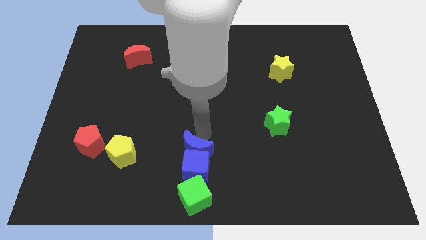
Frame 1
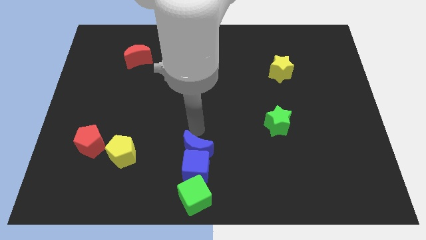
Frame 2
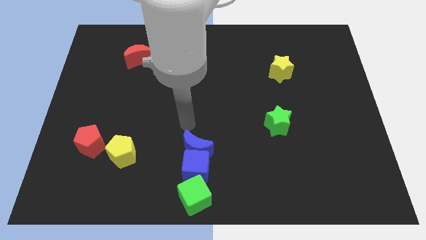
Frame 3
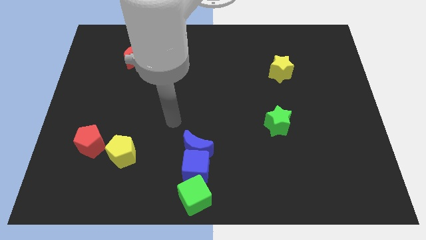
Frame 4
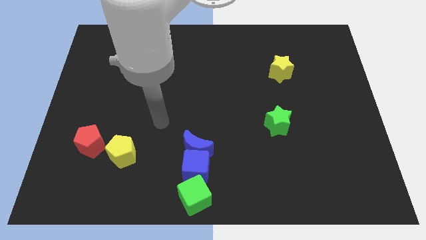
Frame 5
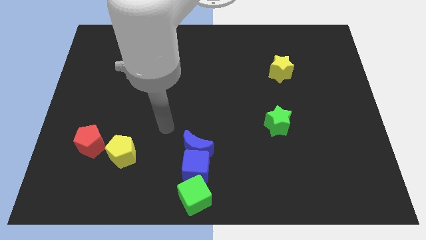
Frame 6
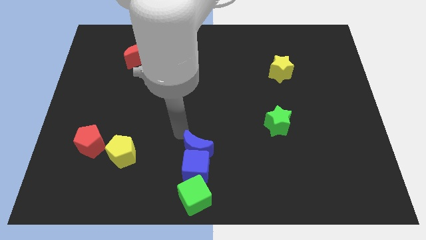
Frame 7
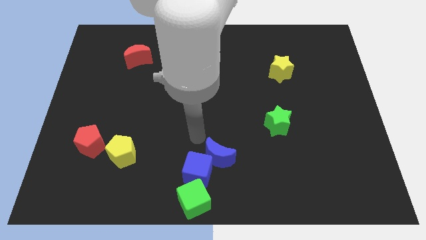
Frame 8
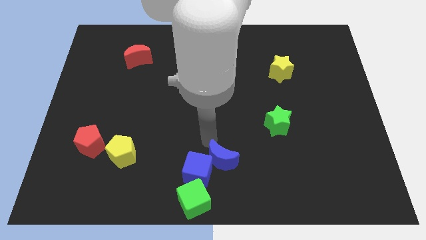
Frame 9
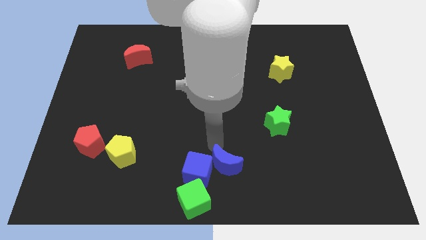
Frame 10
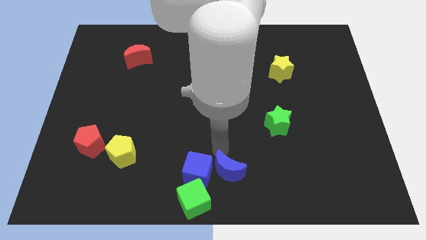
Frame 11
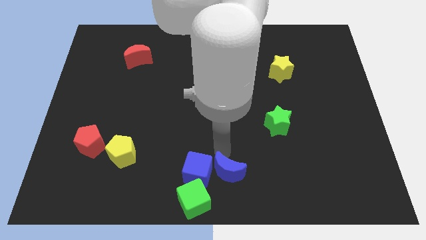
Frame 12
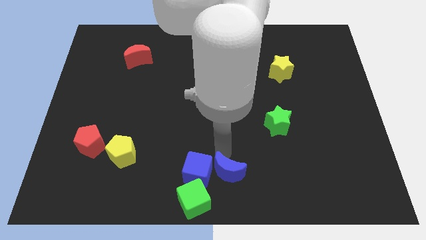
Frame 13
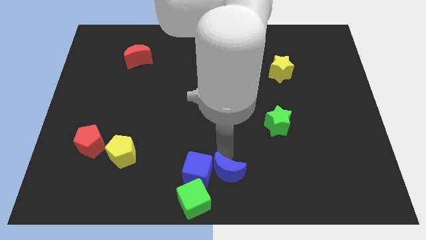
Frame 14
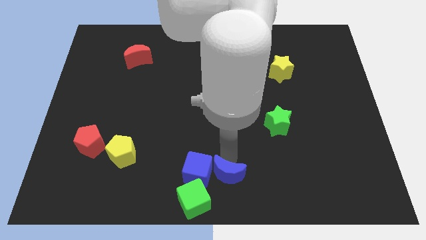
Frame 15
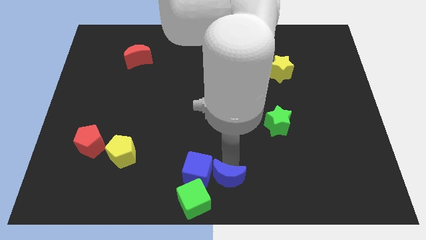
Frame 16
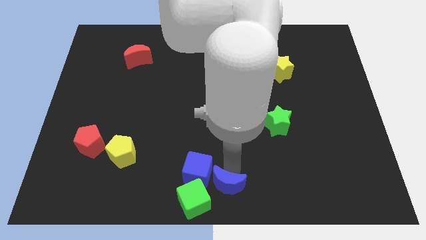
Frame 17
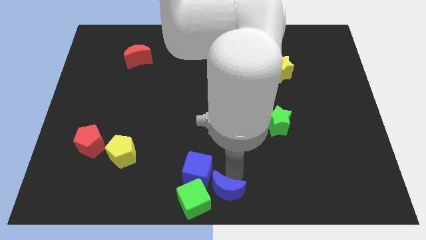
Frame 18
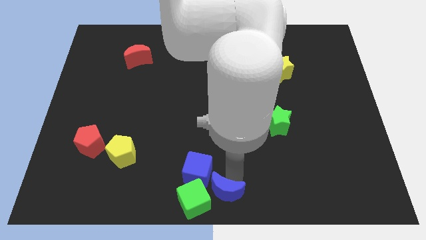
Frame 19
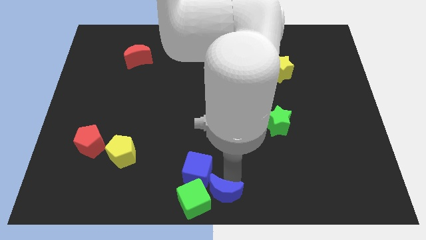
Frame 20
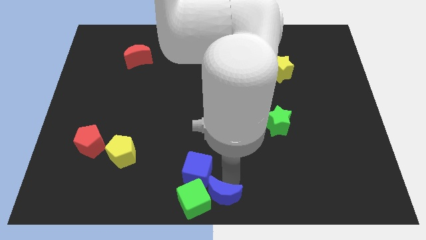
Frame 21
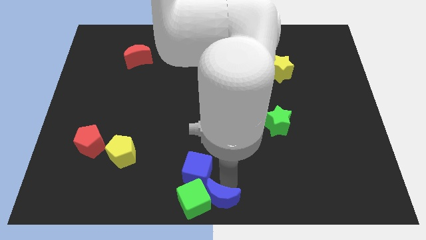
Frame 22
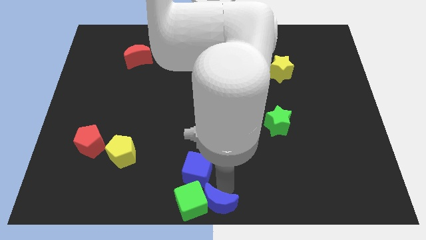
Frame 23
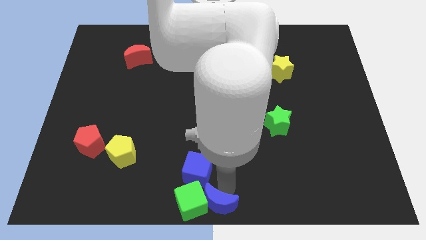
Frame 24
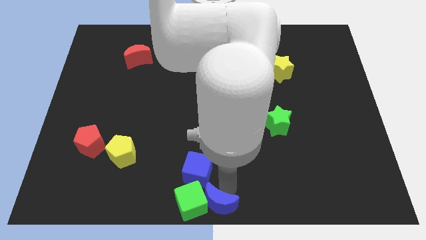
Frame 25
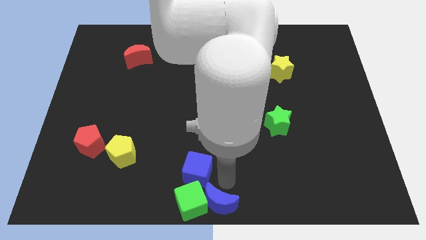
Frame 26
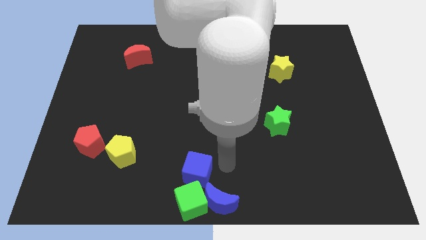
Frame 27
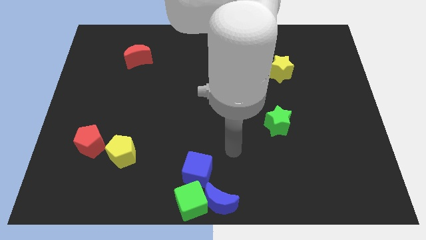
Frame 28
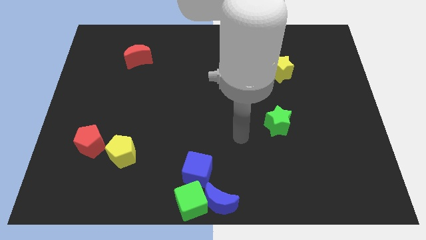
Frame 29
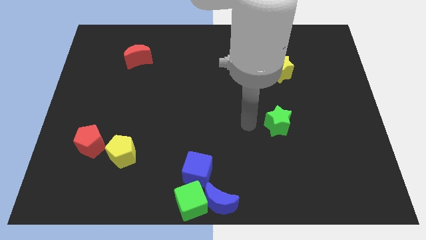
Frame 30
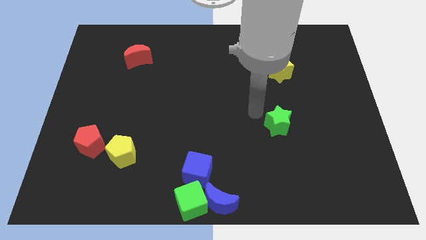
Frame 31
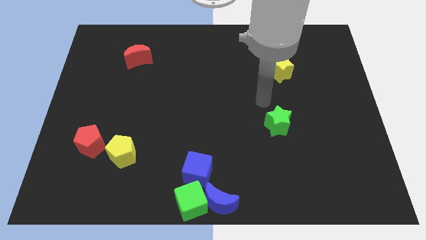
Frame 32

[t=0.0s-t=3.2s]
move the blue crescent into the green cube

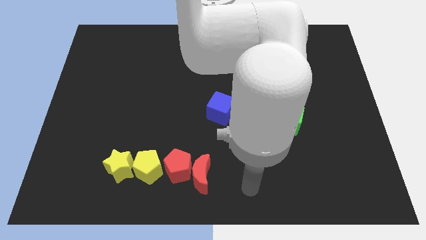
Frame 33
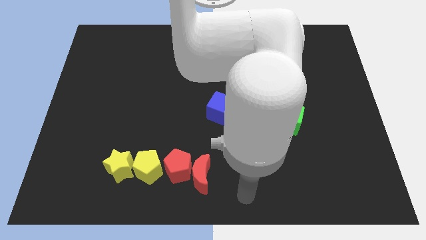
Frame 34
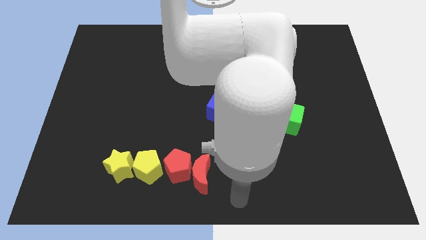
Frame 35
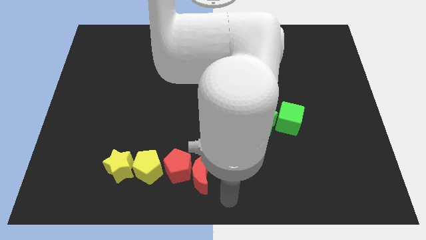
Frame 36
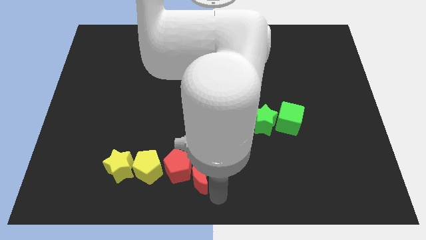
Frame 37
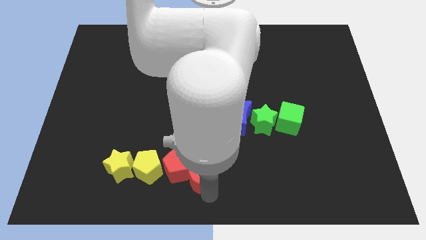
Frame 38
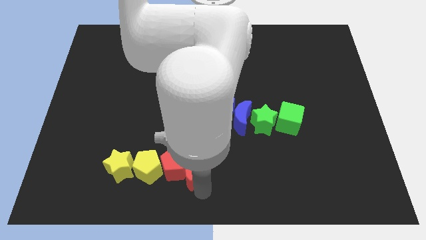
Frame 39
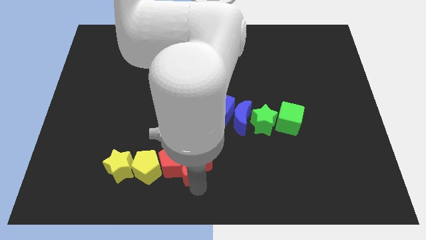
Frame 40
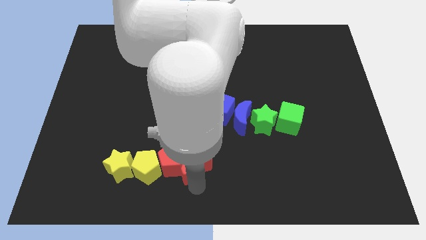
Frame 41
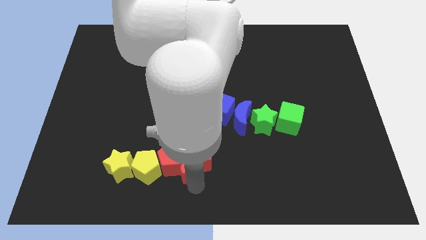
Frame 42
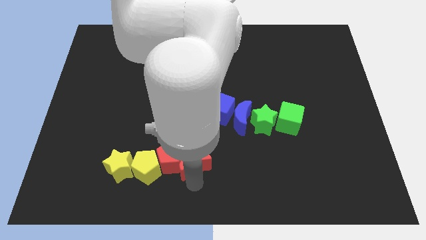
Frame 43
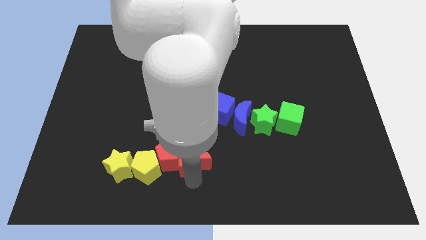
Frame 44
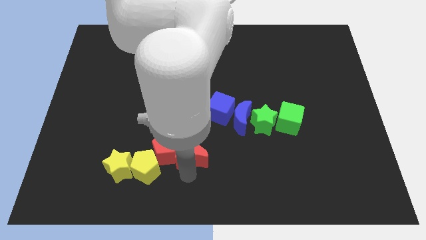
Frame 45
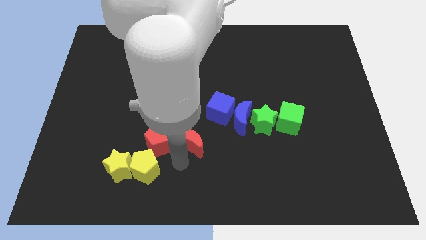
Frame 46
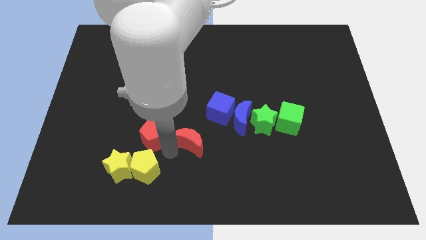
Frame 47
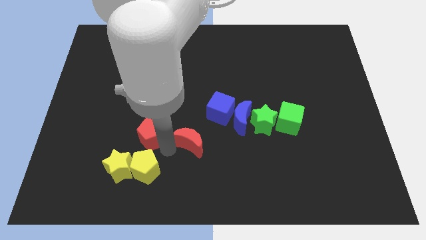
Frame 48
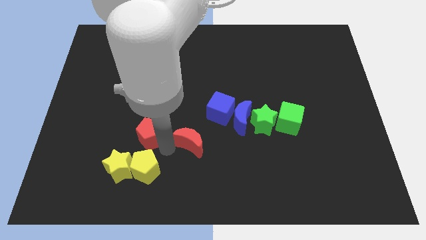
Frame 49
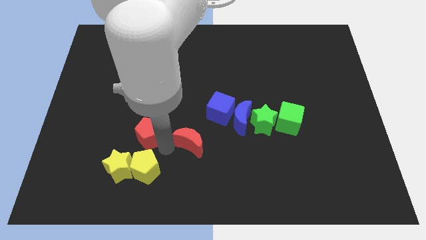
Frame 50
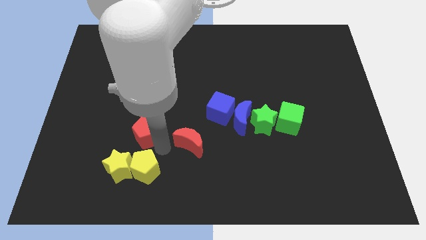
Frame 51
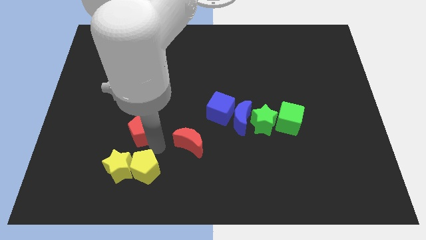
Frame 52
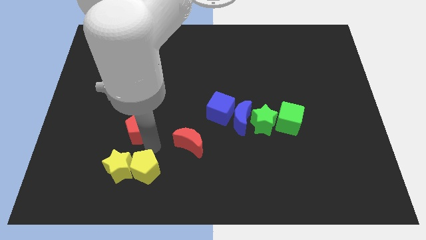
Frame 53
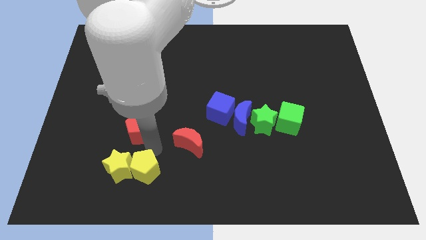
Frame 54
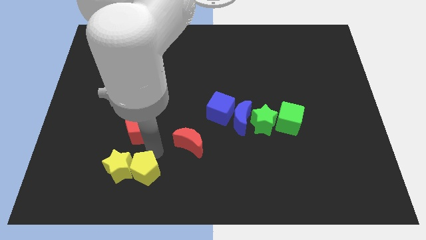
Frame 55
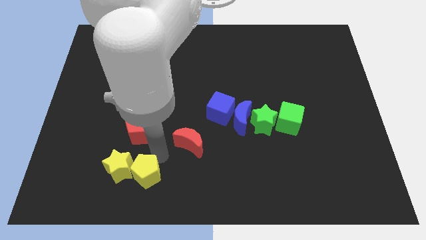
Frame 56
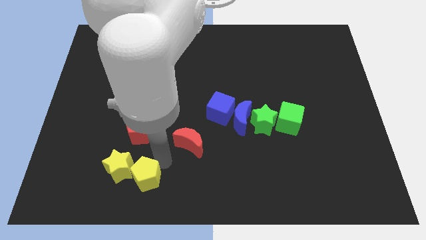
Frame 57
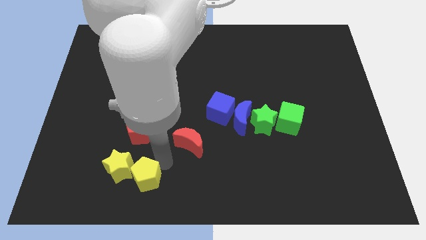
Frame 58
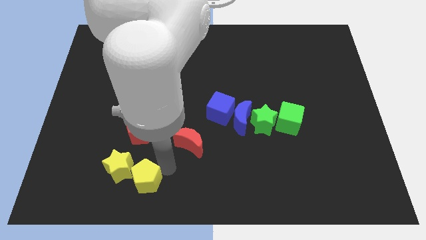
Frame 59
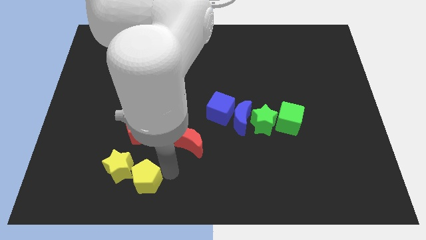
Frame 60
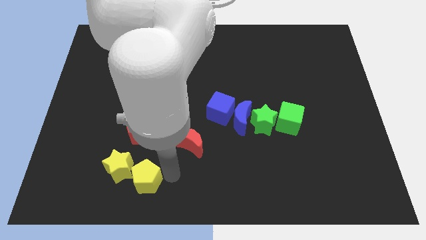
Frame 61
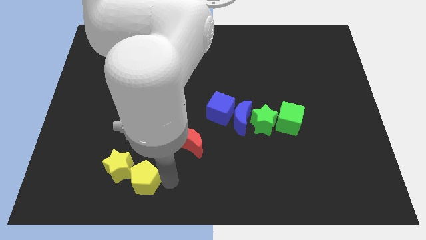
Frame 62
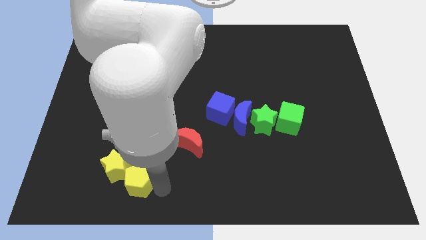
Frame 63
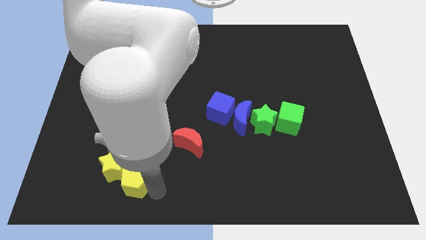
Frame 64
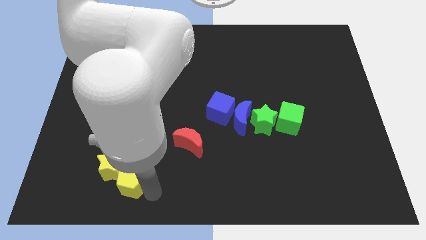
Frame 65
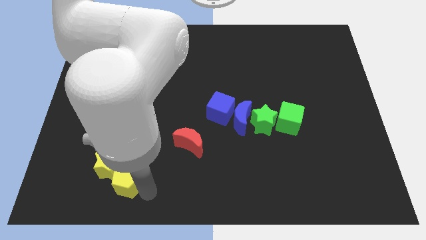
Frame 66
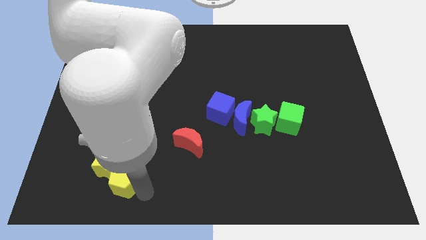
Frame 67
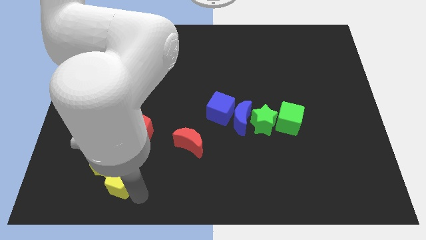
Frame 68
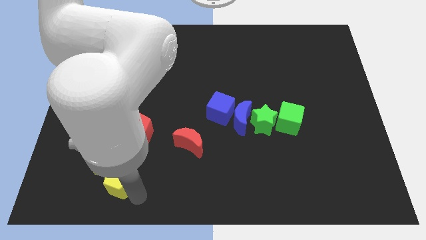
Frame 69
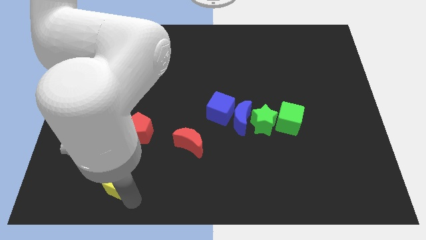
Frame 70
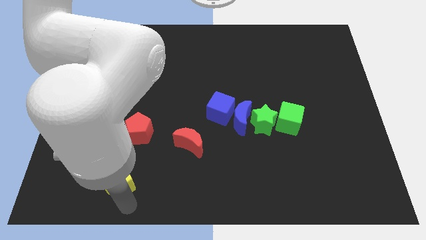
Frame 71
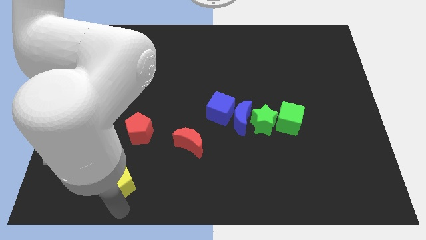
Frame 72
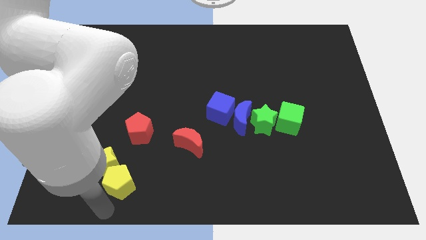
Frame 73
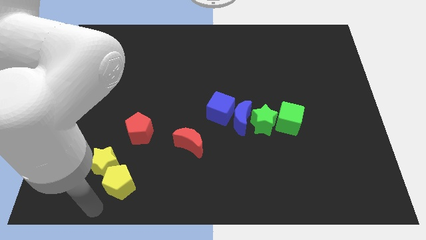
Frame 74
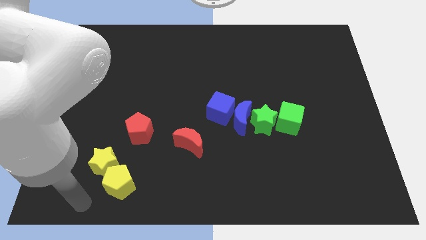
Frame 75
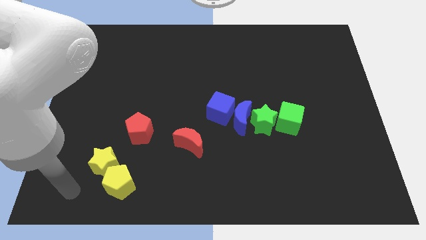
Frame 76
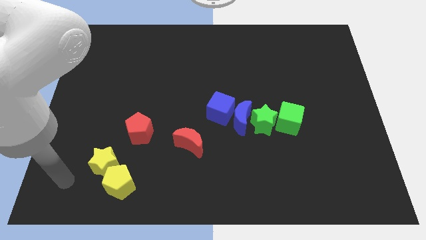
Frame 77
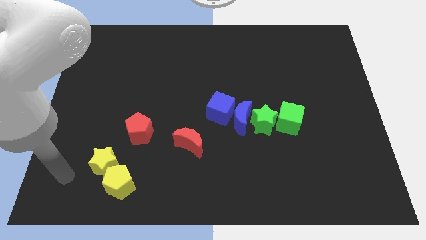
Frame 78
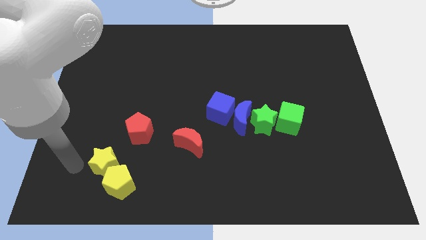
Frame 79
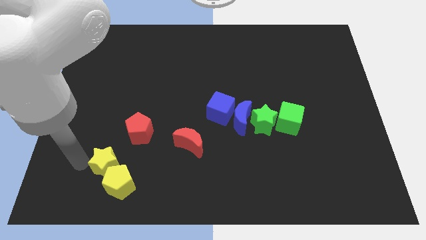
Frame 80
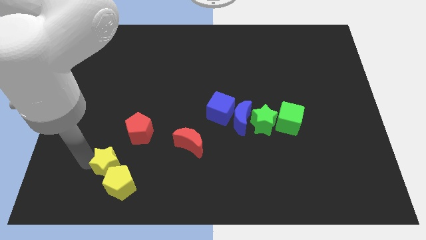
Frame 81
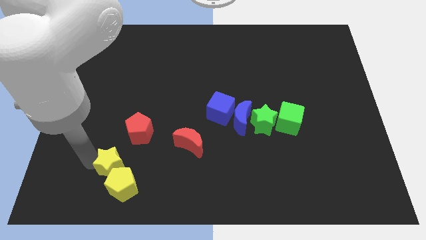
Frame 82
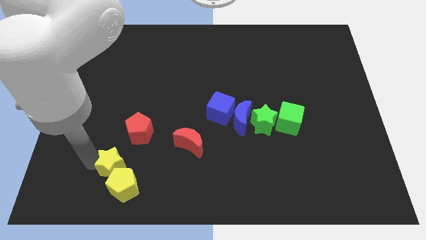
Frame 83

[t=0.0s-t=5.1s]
separate the red pentagon and yellow pentagon

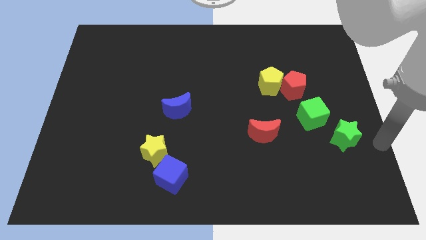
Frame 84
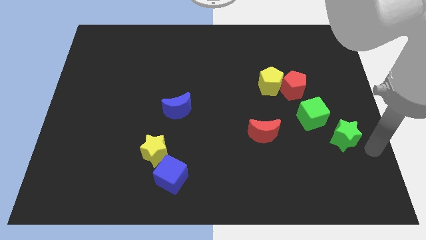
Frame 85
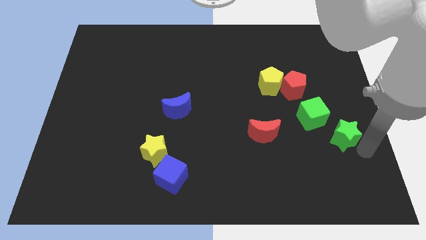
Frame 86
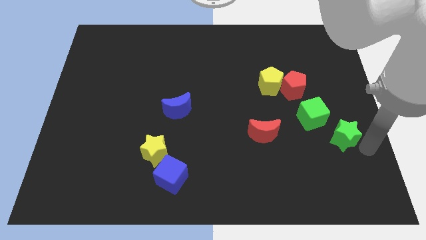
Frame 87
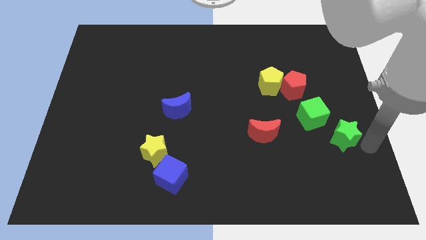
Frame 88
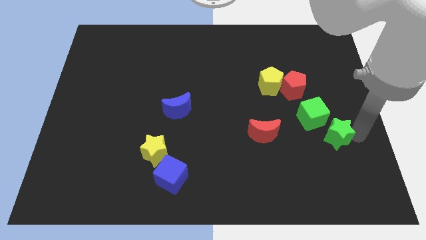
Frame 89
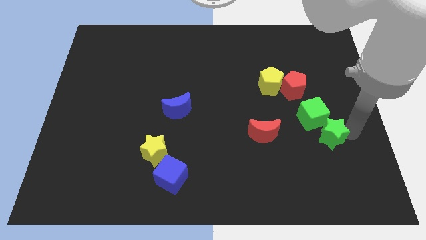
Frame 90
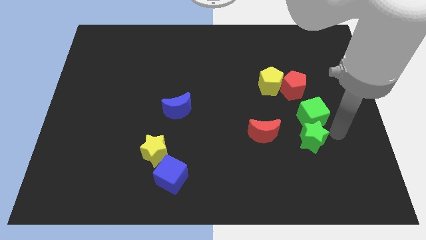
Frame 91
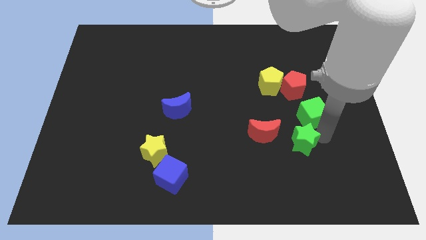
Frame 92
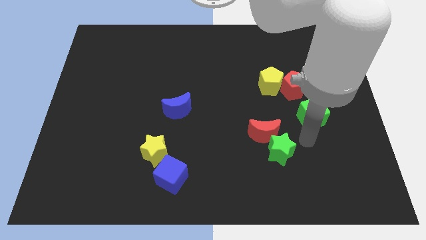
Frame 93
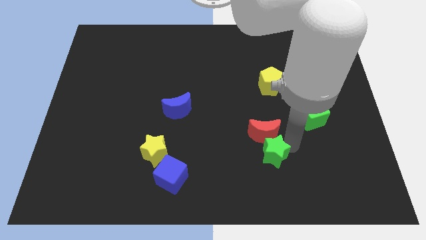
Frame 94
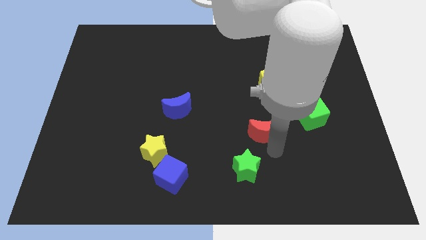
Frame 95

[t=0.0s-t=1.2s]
bring the green star at the bottom side of the red crescent
